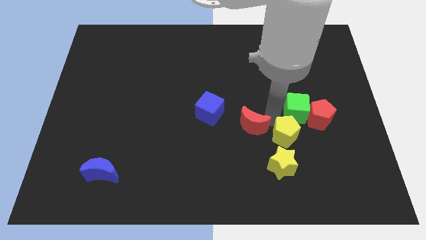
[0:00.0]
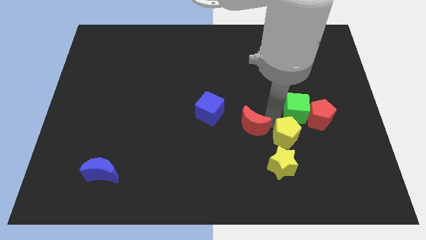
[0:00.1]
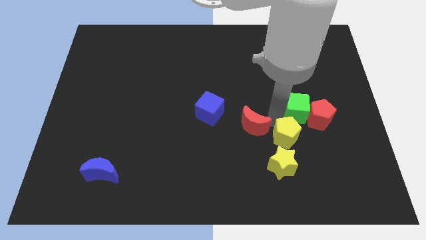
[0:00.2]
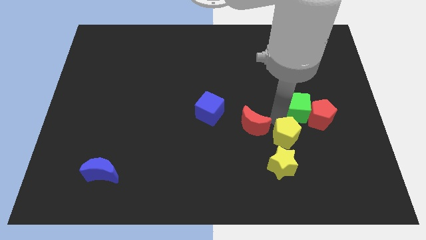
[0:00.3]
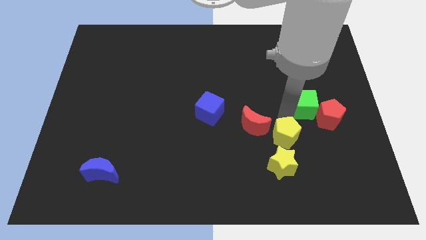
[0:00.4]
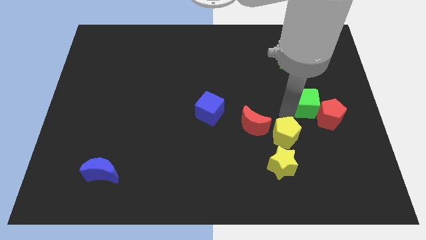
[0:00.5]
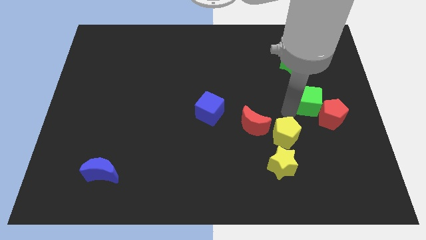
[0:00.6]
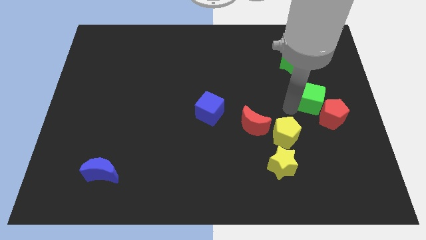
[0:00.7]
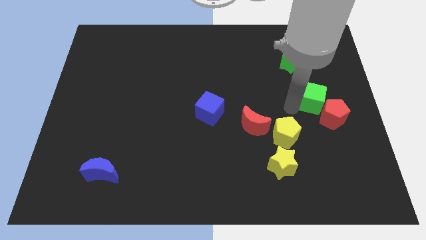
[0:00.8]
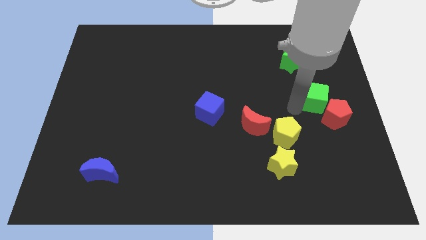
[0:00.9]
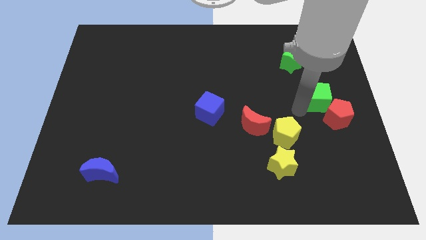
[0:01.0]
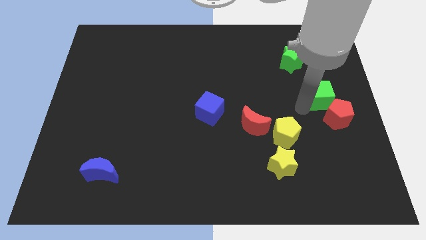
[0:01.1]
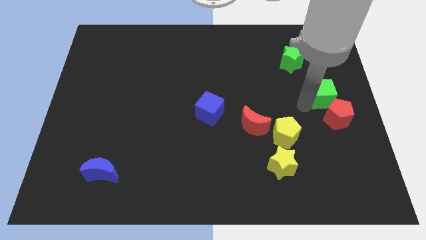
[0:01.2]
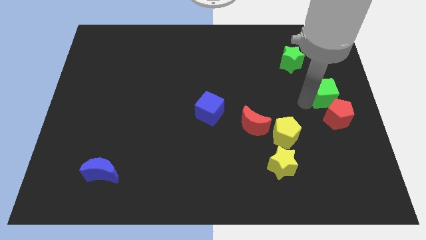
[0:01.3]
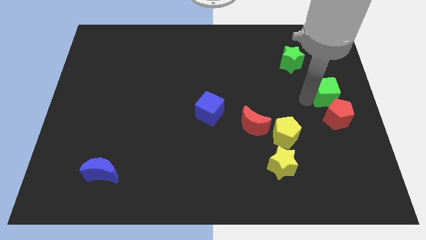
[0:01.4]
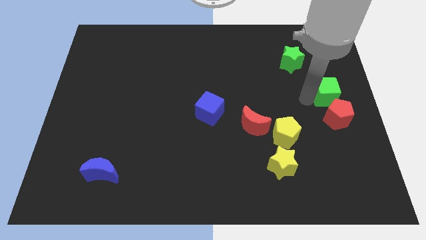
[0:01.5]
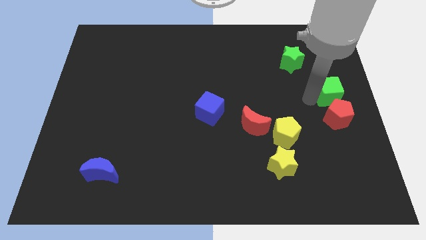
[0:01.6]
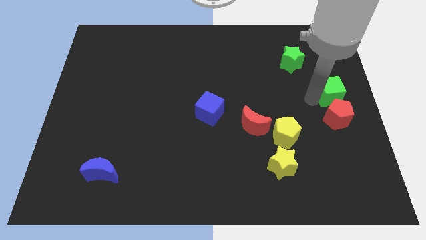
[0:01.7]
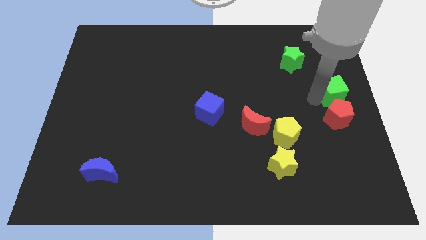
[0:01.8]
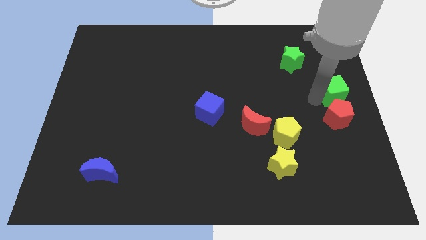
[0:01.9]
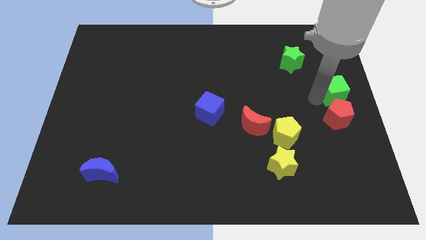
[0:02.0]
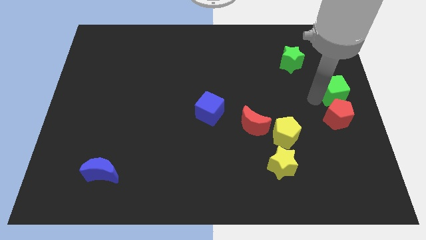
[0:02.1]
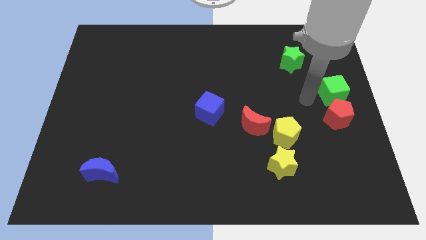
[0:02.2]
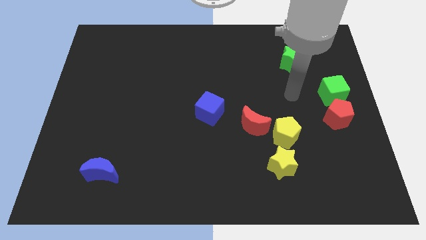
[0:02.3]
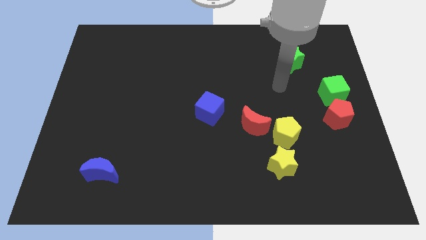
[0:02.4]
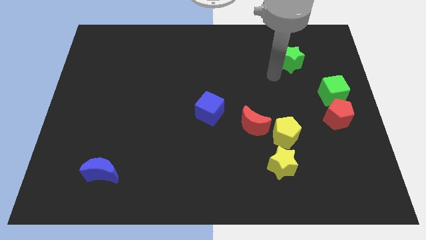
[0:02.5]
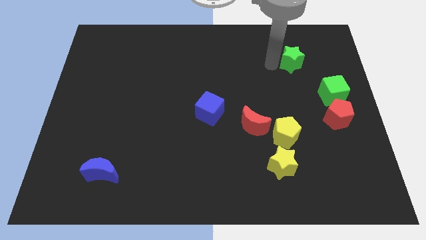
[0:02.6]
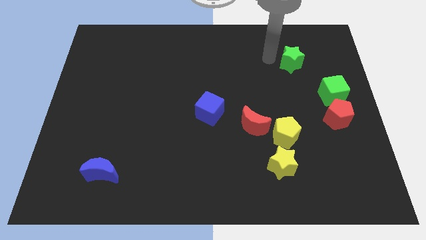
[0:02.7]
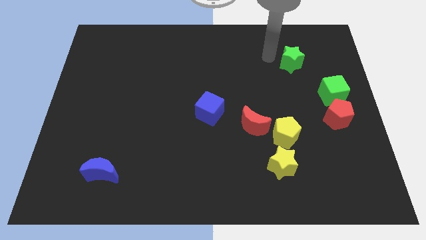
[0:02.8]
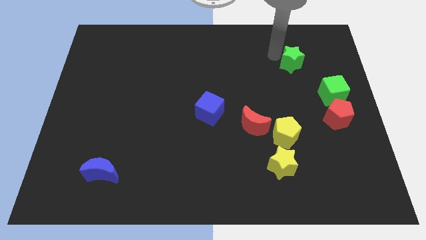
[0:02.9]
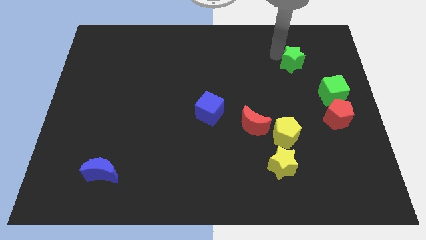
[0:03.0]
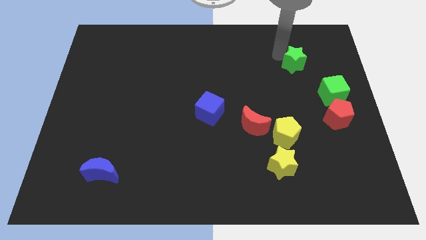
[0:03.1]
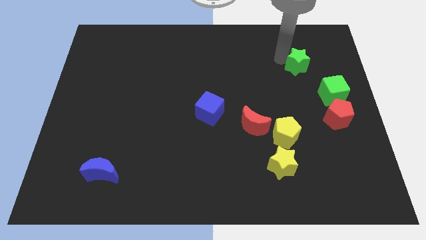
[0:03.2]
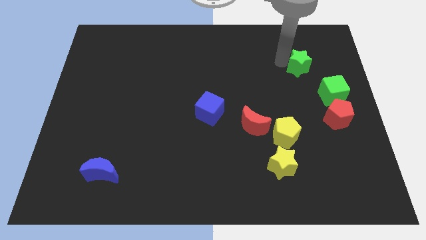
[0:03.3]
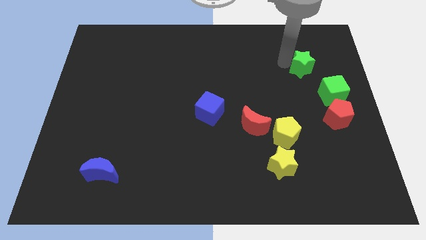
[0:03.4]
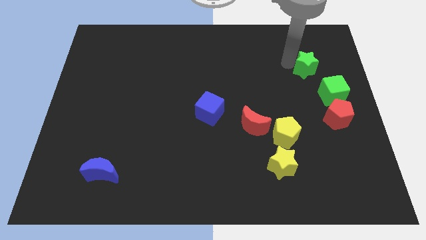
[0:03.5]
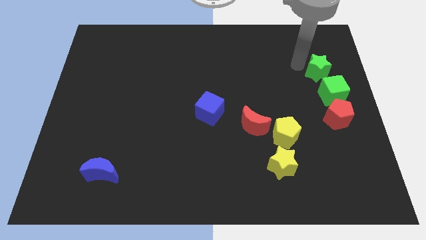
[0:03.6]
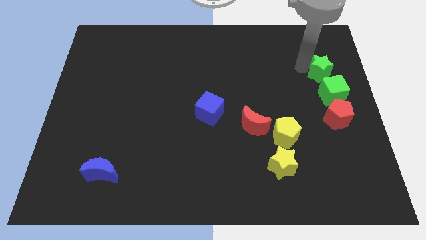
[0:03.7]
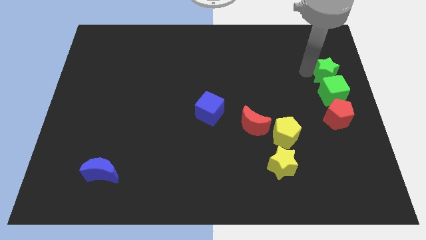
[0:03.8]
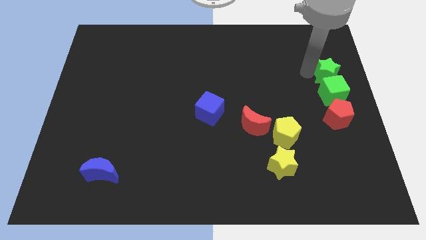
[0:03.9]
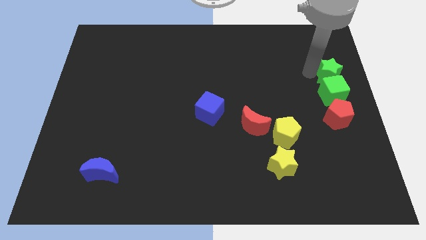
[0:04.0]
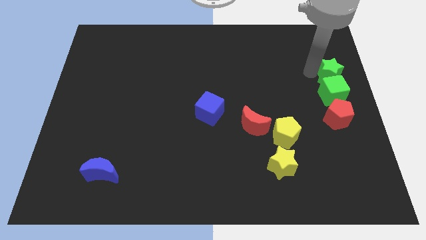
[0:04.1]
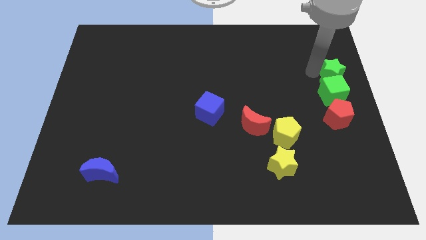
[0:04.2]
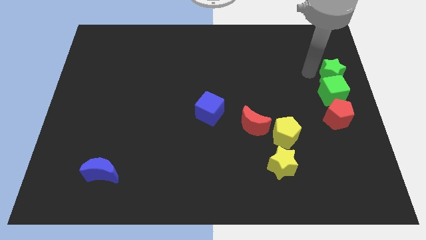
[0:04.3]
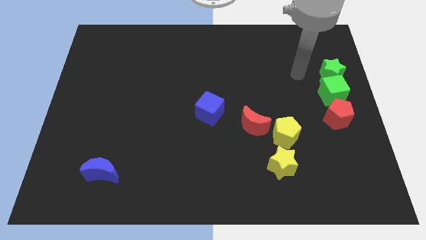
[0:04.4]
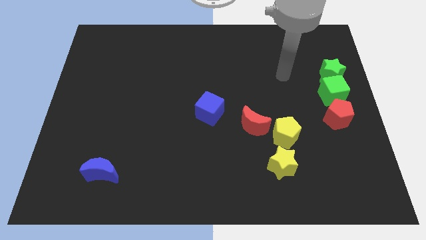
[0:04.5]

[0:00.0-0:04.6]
drag the green blocks above the red pentagon

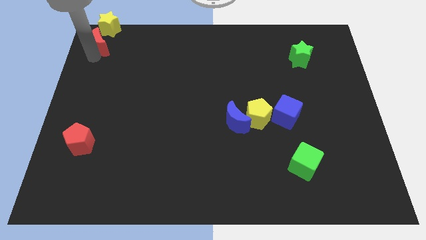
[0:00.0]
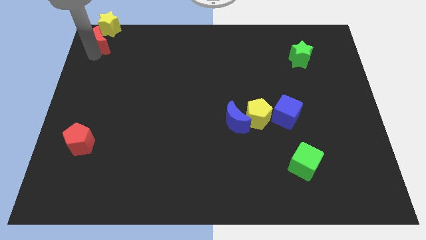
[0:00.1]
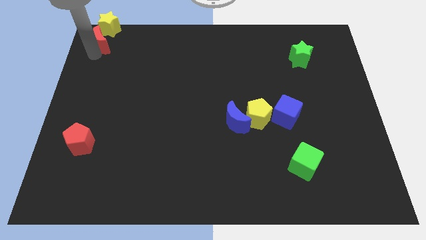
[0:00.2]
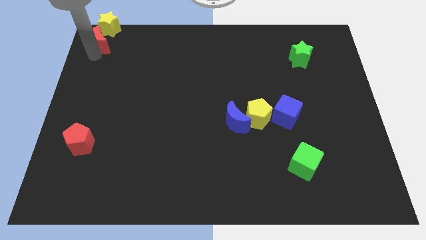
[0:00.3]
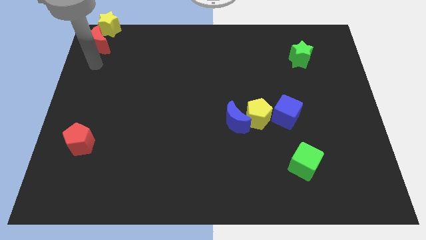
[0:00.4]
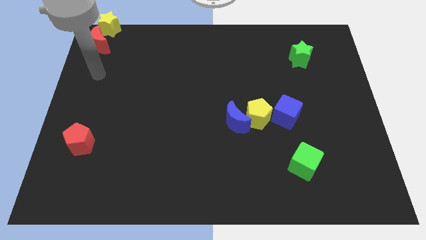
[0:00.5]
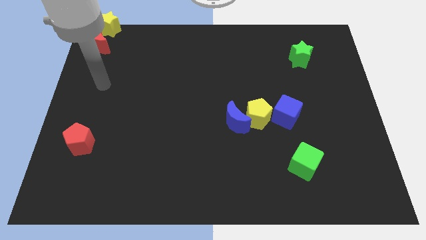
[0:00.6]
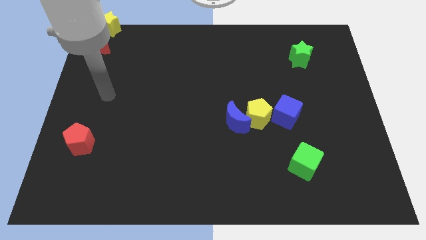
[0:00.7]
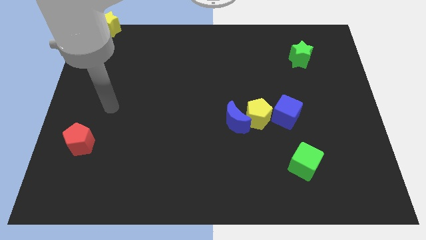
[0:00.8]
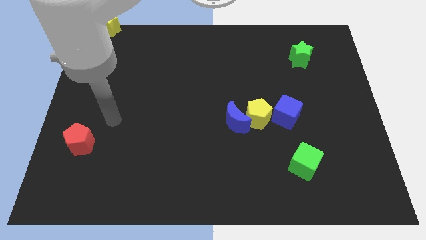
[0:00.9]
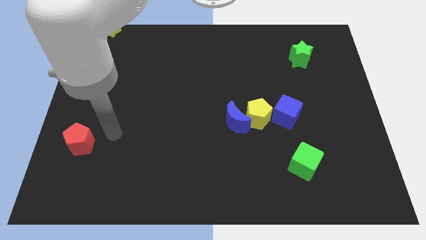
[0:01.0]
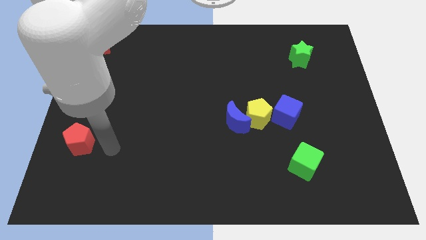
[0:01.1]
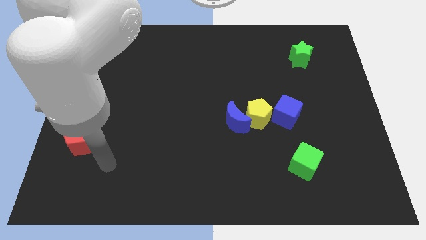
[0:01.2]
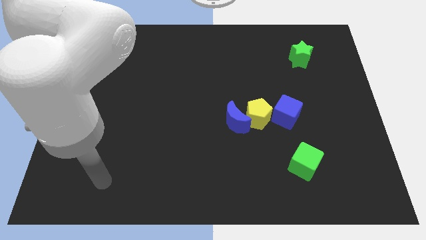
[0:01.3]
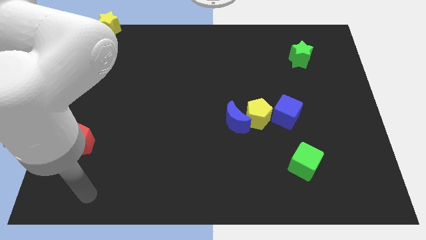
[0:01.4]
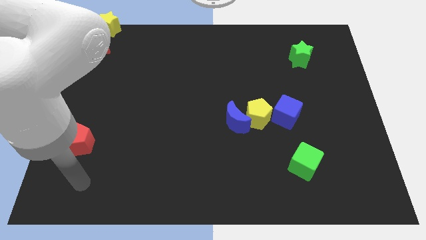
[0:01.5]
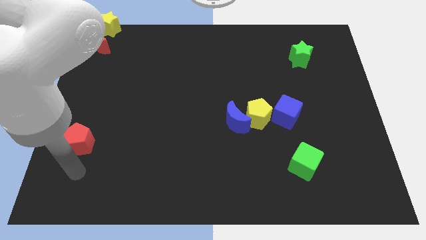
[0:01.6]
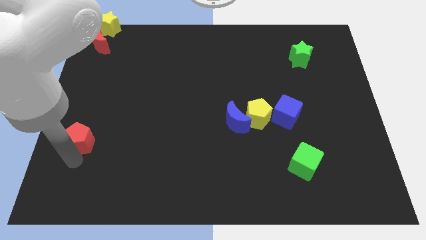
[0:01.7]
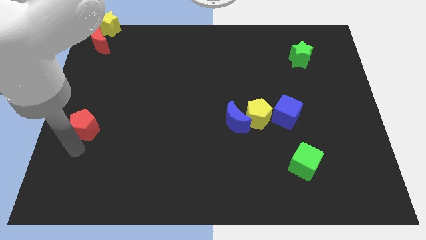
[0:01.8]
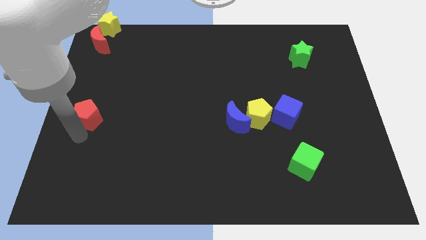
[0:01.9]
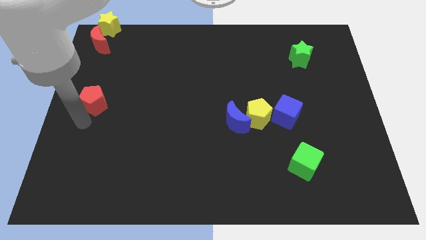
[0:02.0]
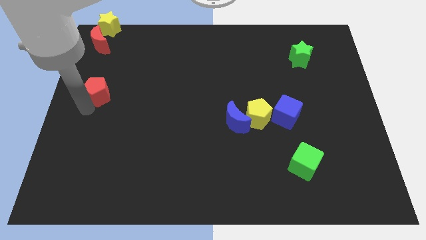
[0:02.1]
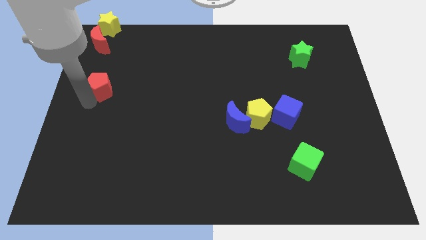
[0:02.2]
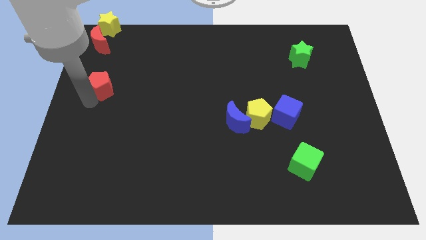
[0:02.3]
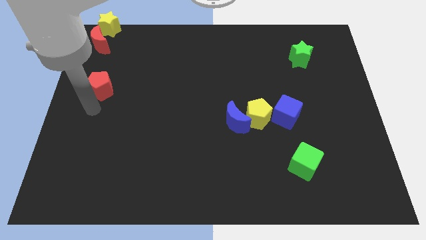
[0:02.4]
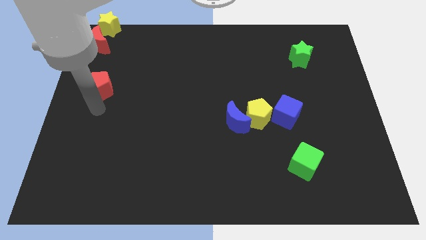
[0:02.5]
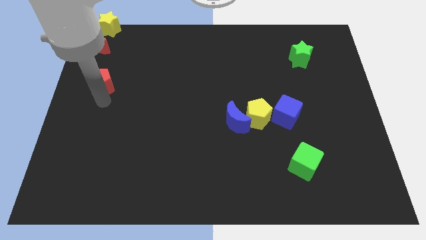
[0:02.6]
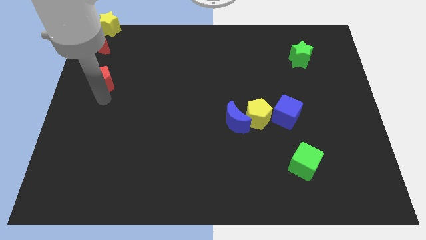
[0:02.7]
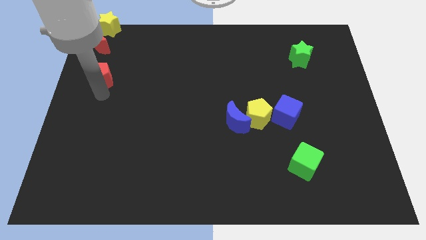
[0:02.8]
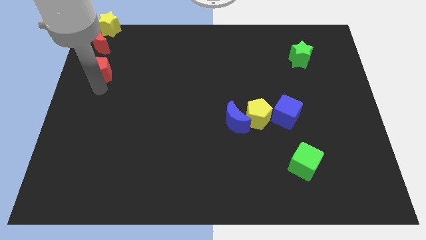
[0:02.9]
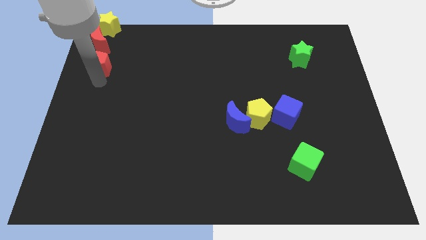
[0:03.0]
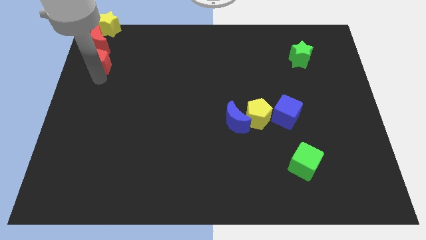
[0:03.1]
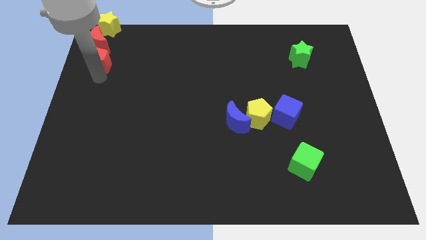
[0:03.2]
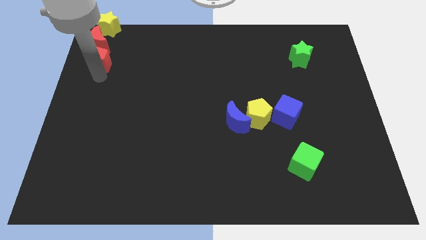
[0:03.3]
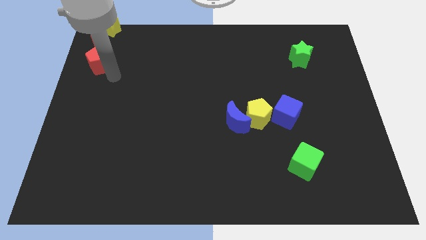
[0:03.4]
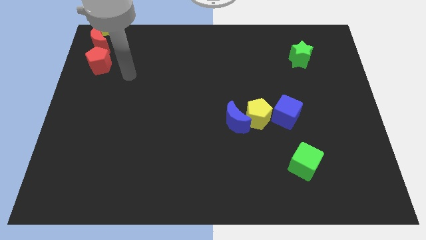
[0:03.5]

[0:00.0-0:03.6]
move the red pentagon towards the red crescent

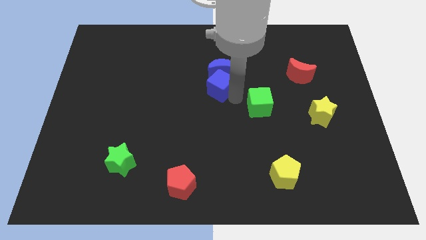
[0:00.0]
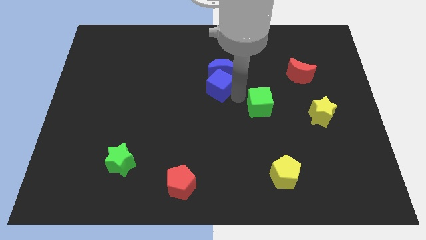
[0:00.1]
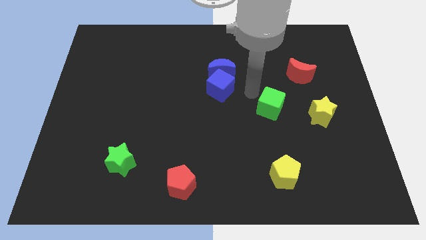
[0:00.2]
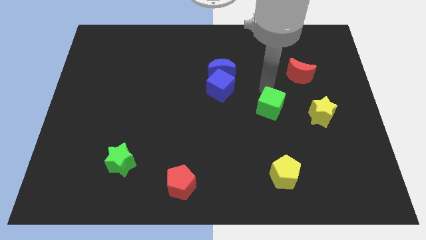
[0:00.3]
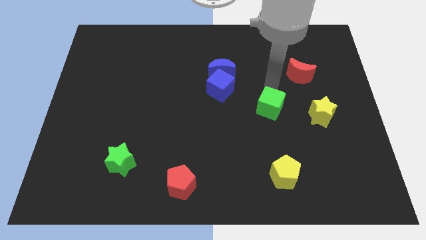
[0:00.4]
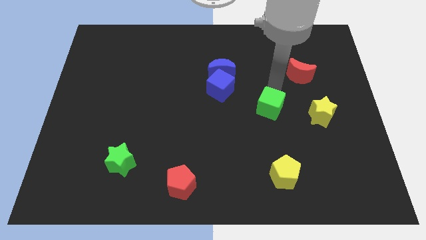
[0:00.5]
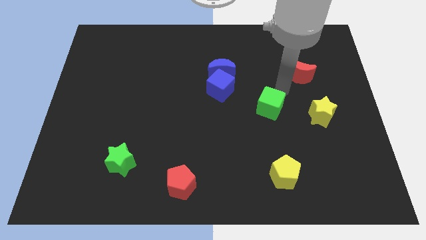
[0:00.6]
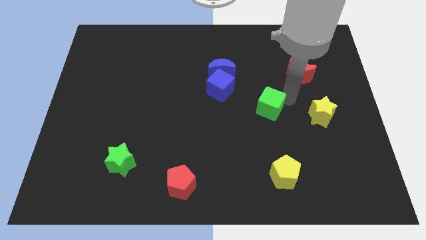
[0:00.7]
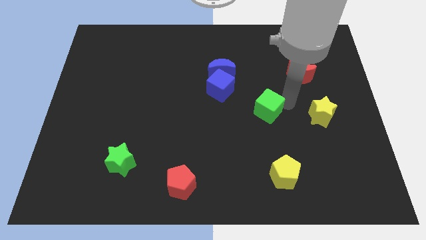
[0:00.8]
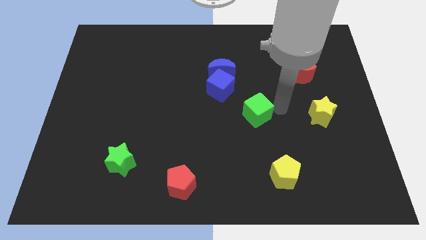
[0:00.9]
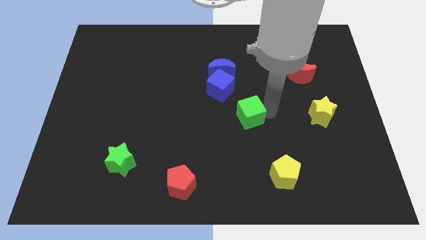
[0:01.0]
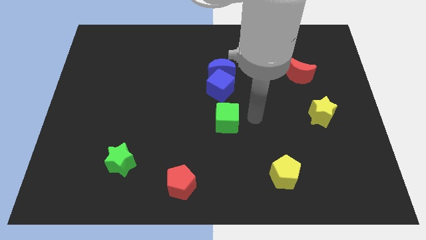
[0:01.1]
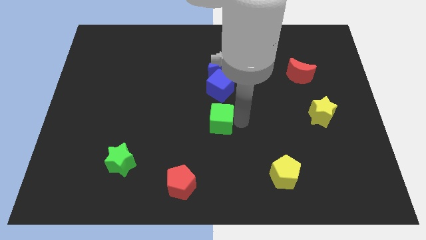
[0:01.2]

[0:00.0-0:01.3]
place the green cube underneath the blue blocks
